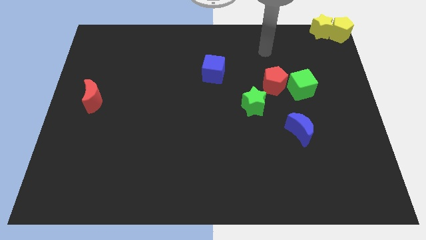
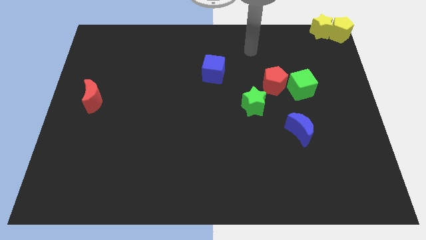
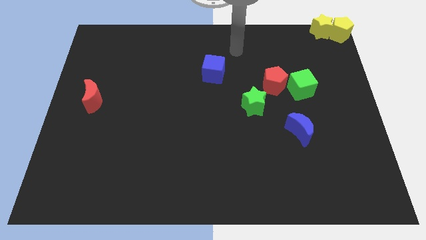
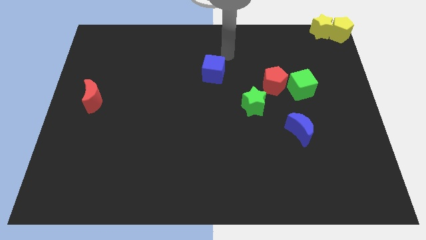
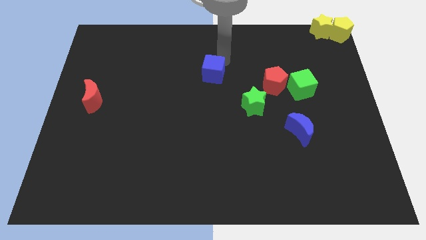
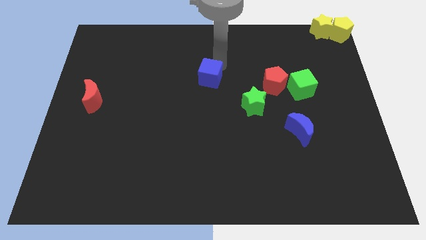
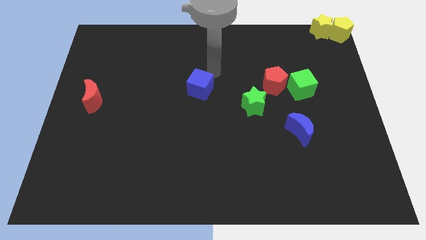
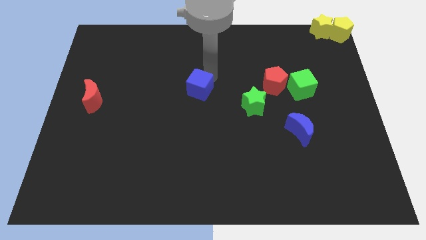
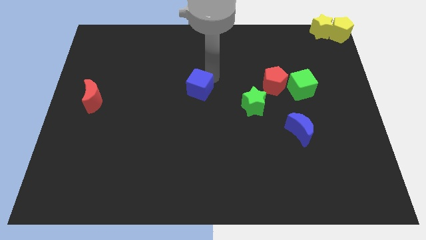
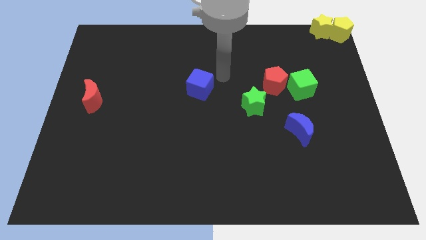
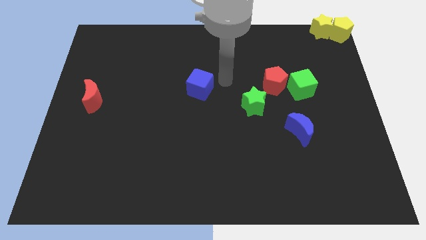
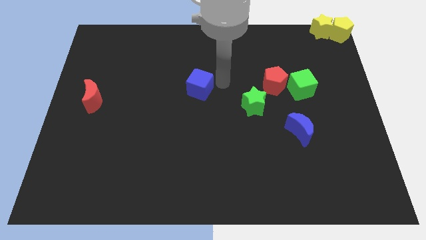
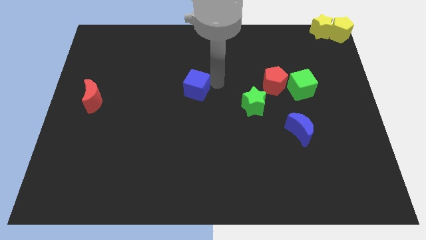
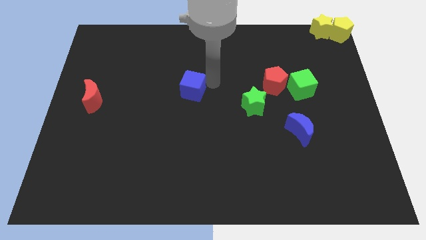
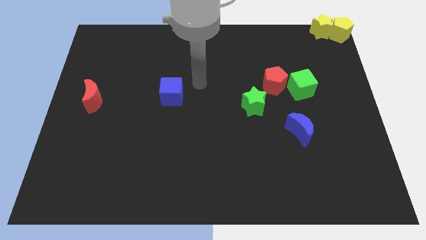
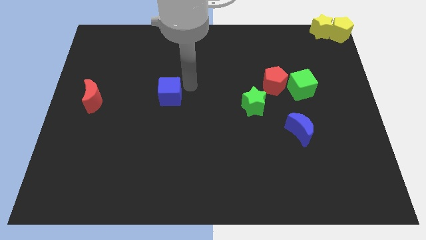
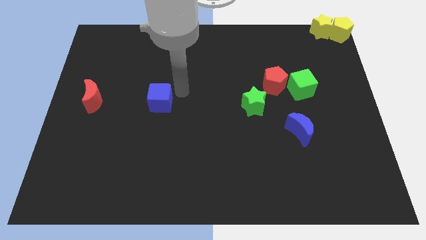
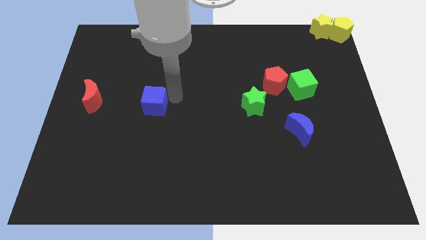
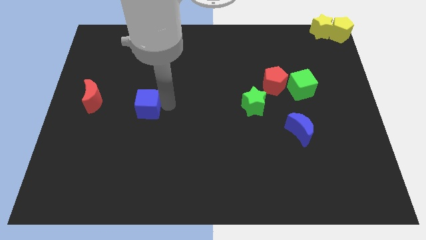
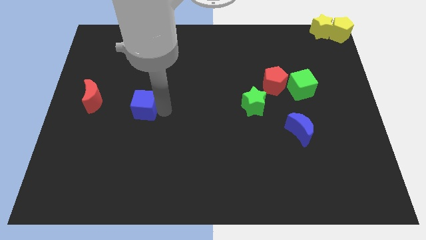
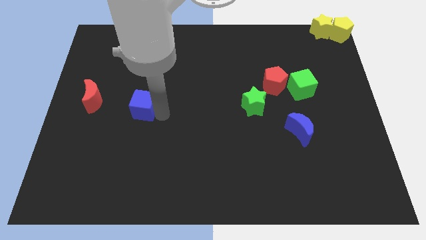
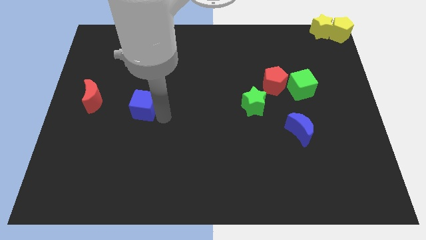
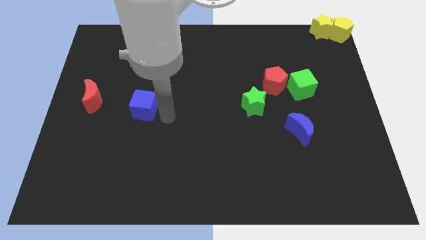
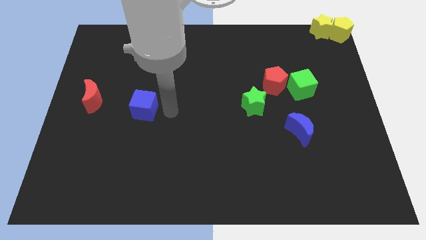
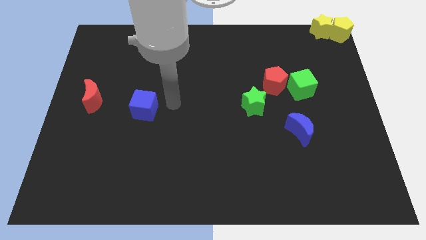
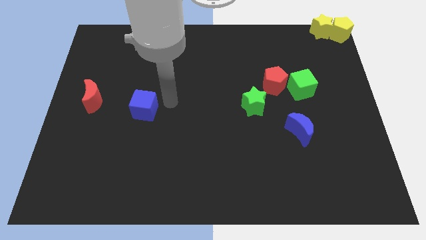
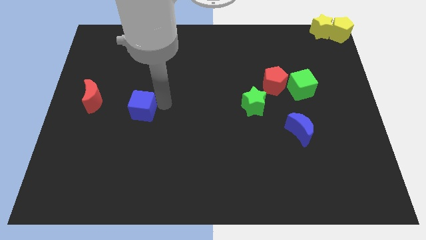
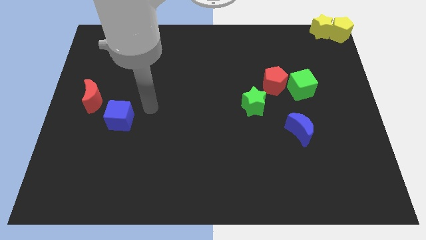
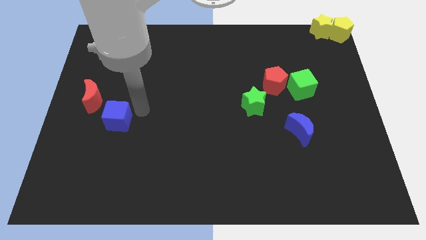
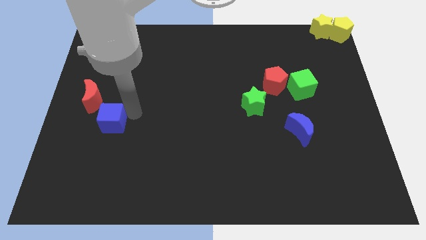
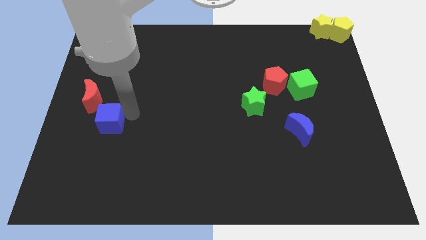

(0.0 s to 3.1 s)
push blue cube close to red crescent

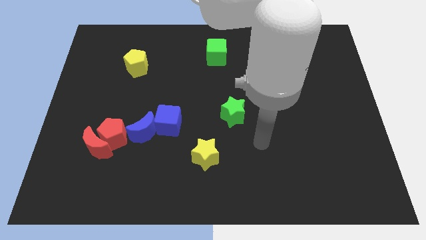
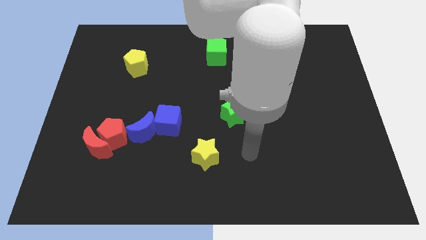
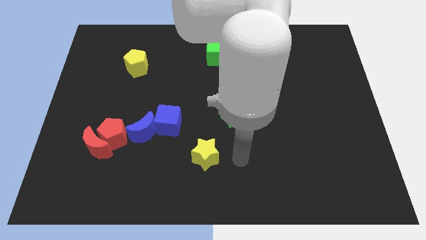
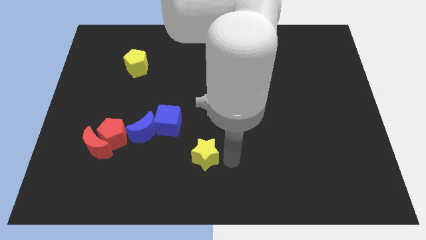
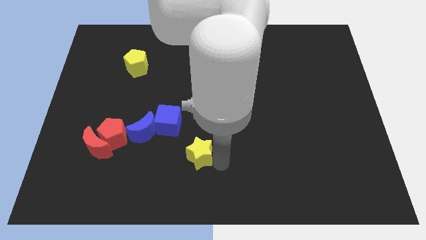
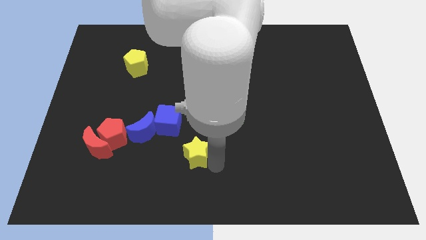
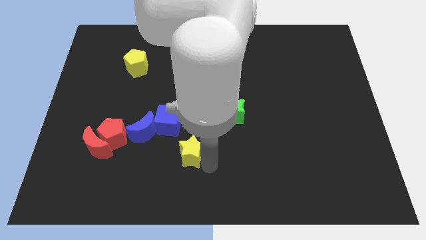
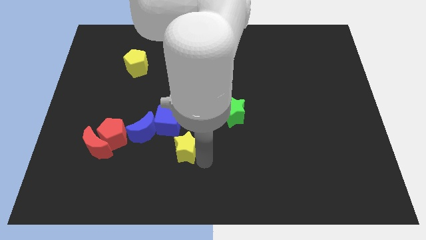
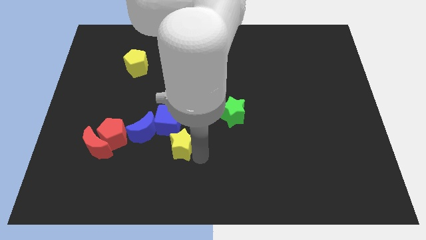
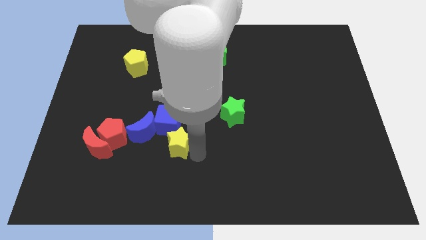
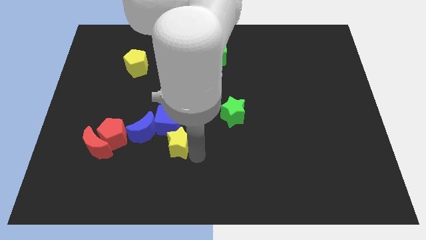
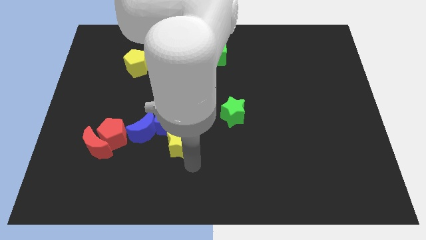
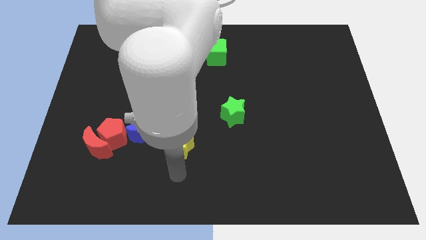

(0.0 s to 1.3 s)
push the yellow star into the blue cube

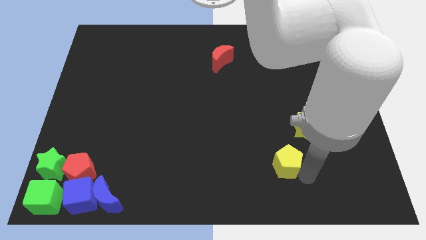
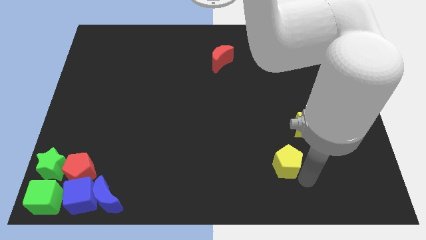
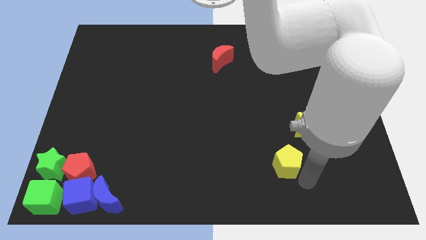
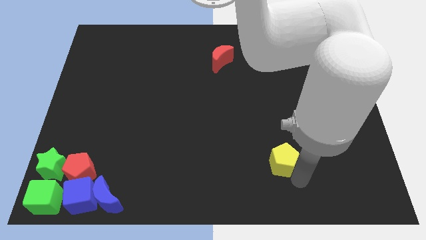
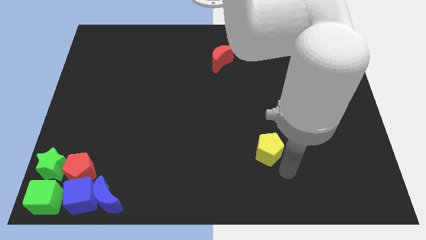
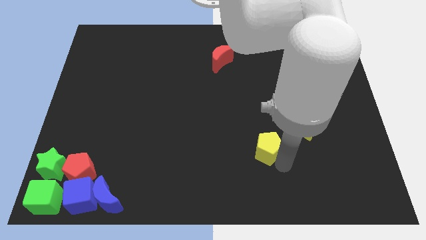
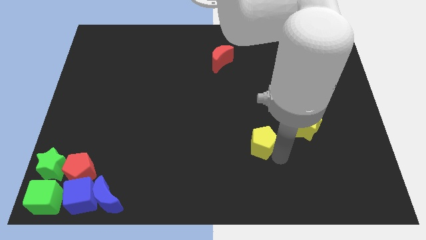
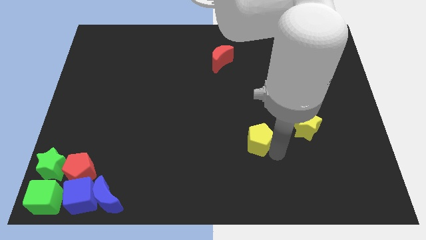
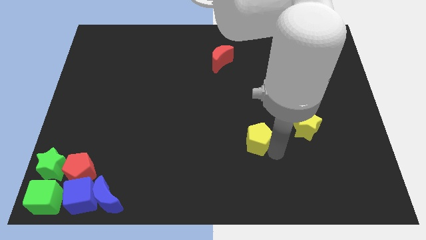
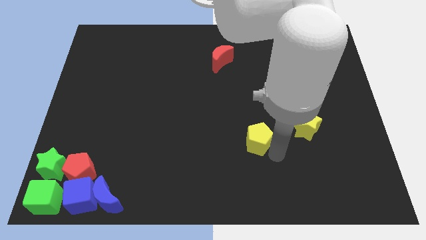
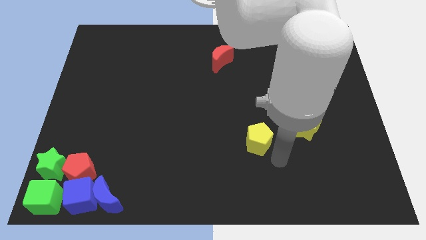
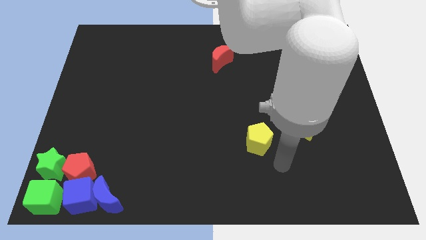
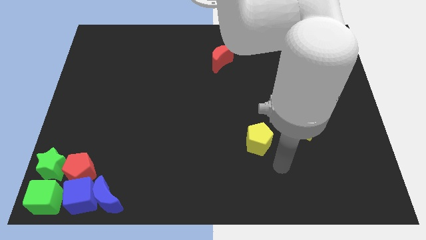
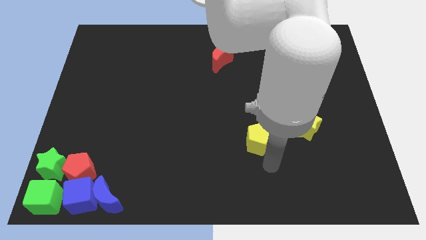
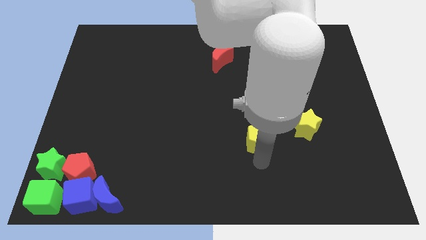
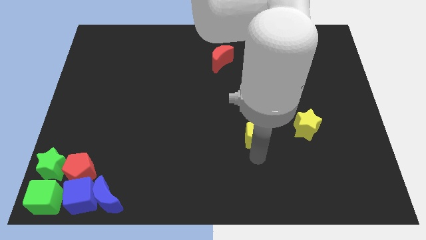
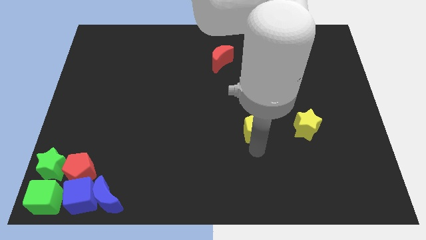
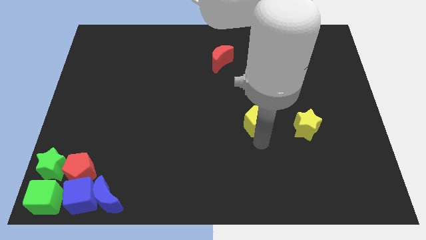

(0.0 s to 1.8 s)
slide the yellow pentagon to the left side of the yellow star

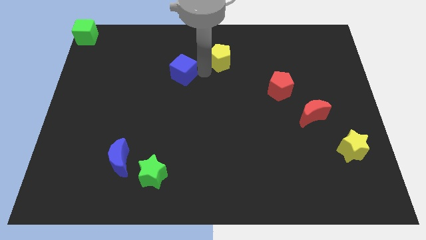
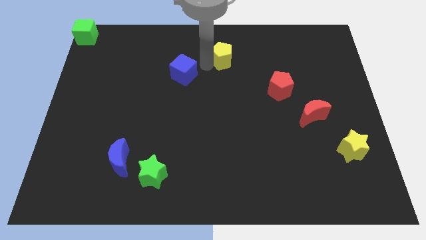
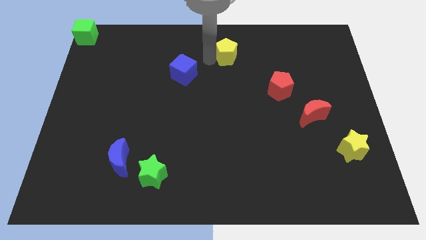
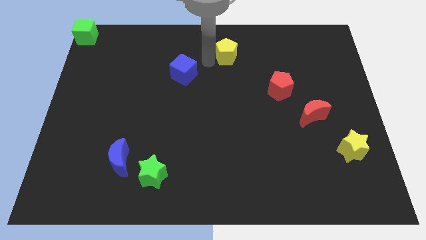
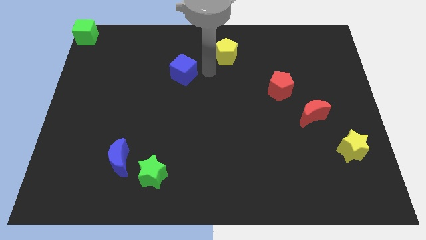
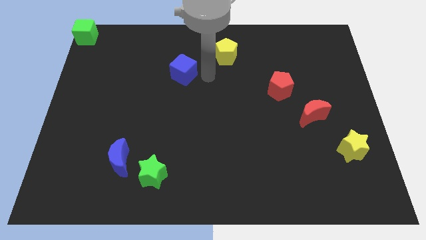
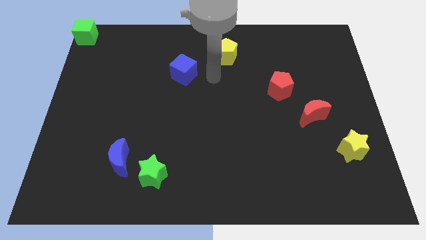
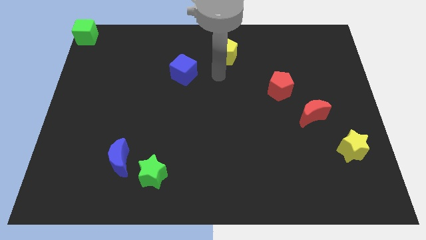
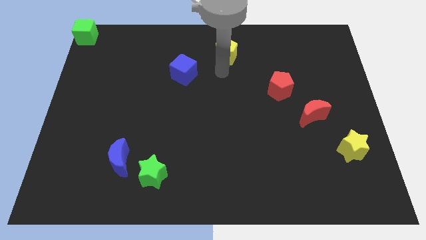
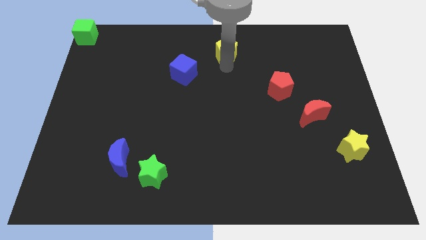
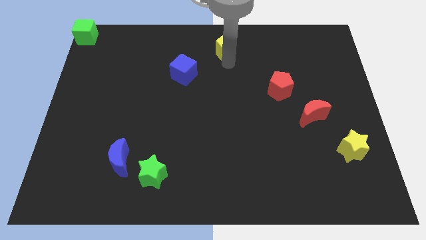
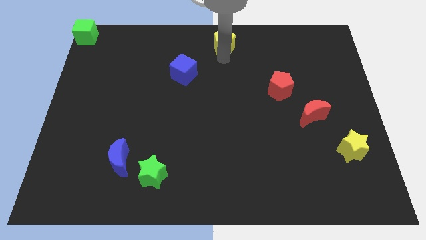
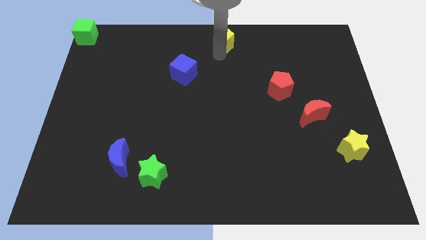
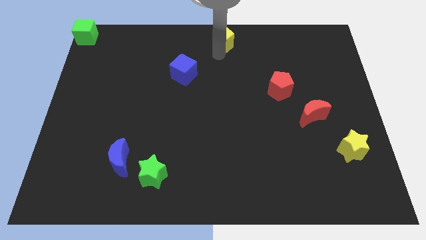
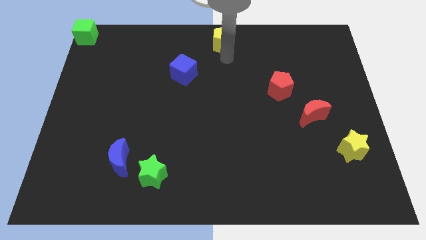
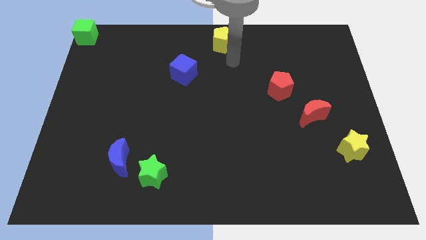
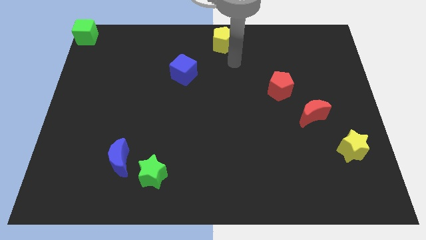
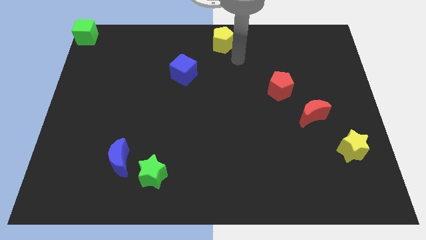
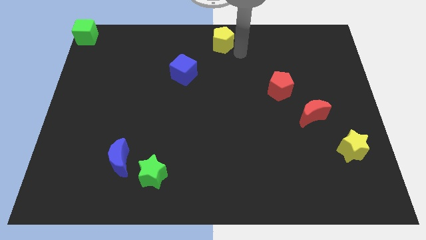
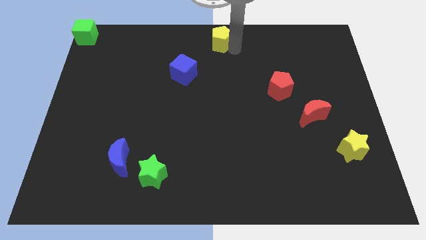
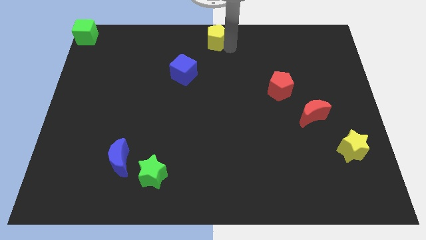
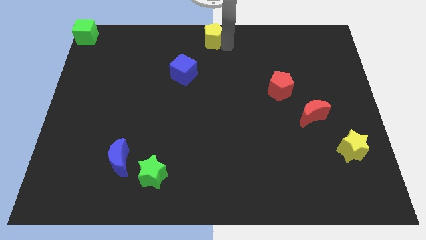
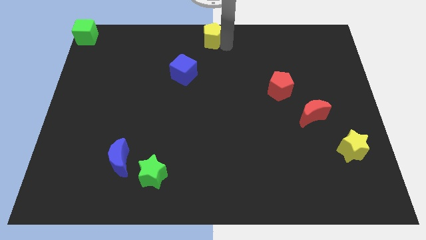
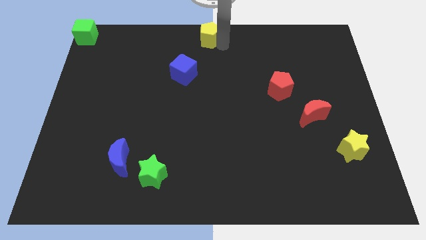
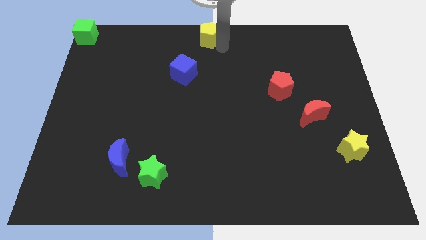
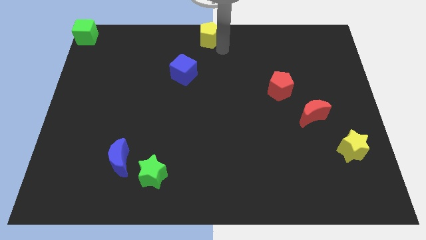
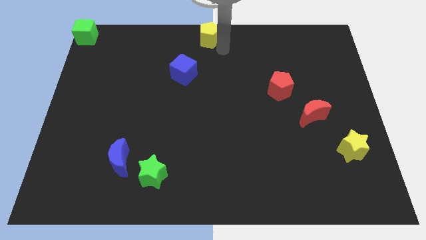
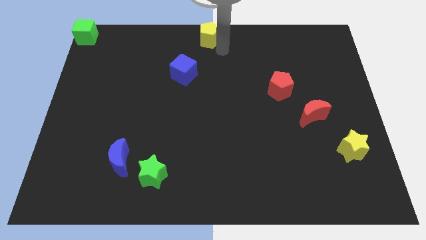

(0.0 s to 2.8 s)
move the yellow pentagon to the top center
